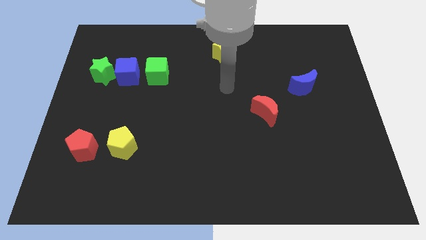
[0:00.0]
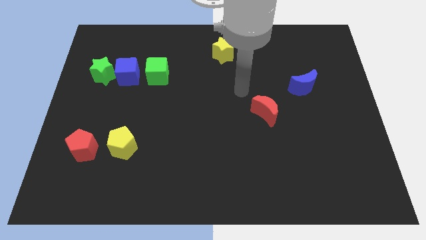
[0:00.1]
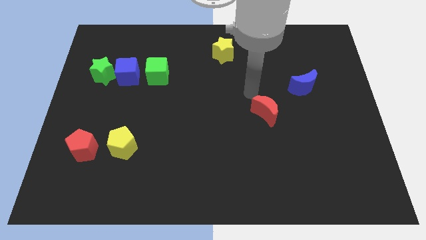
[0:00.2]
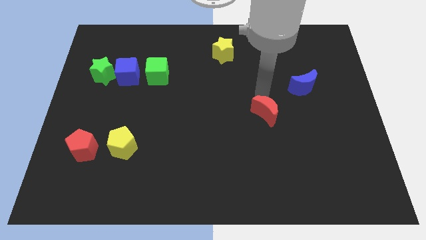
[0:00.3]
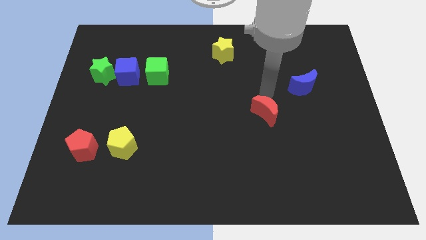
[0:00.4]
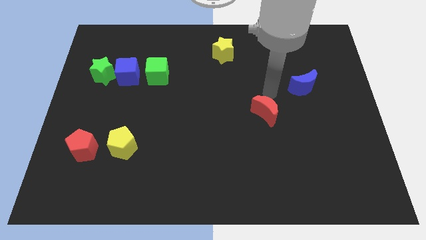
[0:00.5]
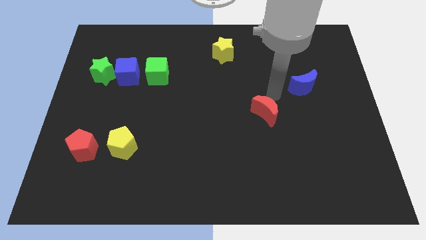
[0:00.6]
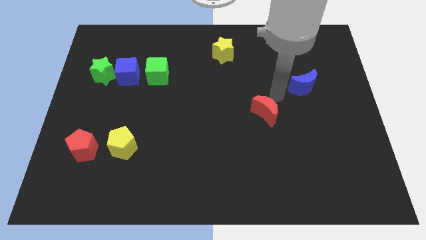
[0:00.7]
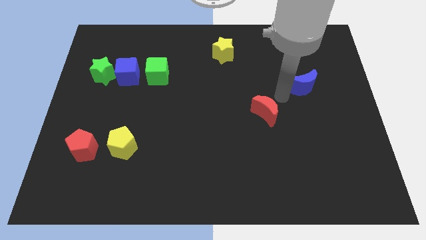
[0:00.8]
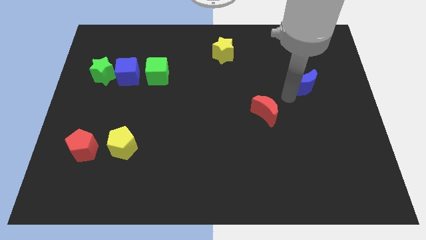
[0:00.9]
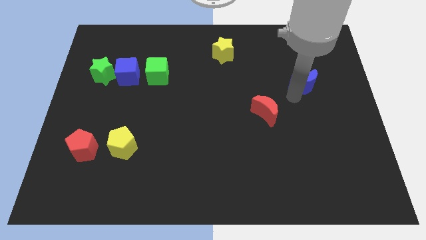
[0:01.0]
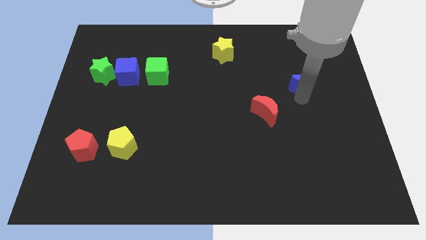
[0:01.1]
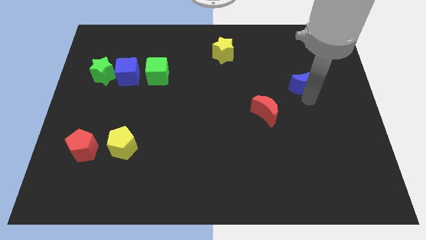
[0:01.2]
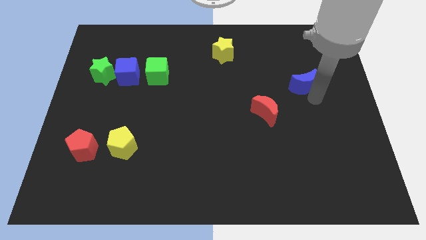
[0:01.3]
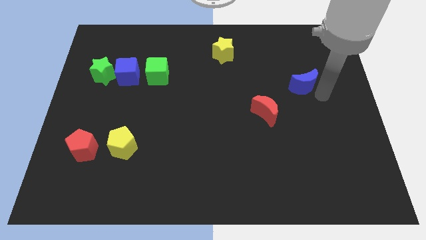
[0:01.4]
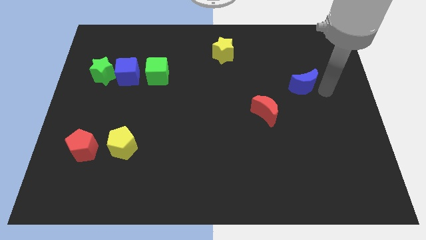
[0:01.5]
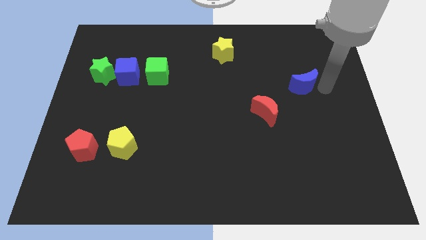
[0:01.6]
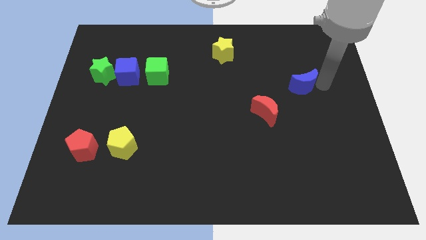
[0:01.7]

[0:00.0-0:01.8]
push arm on the top of blue moon

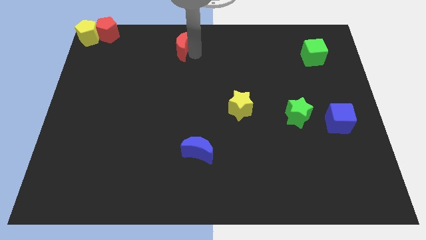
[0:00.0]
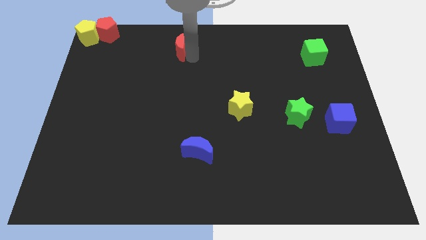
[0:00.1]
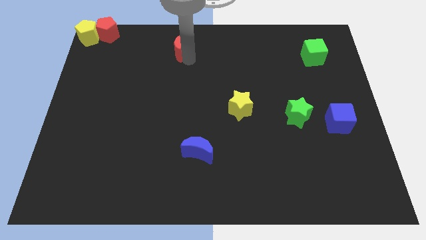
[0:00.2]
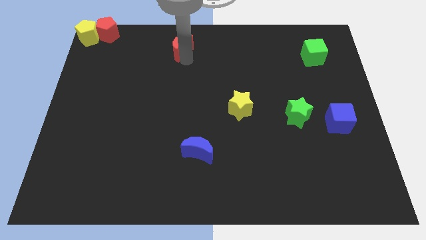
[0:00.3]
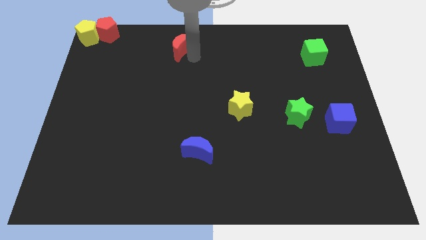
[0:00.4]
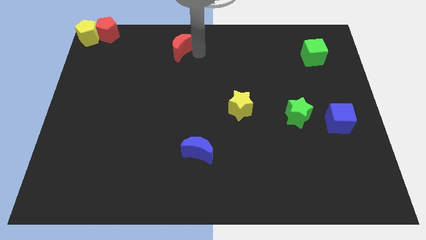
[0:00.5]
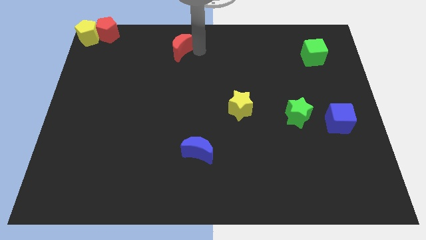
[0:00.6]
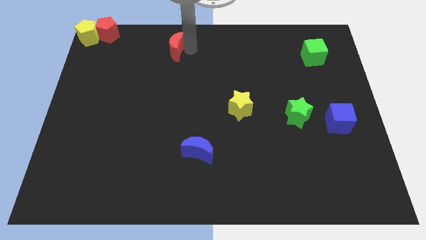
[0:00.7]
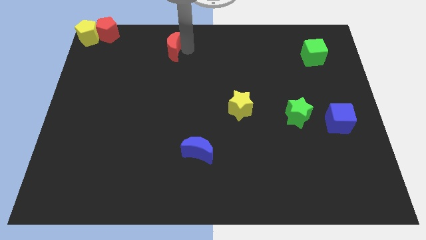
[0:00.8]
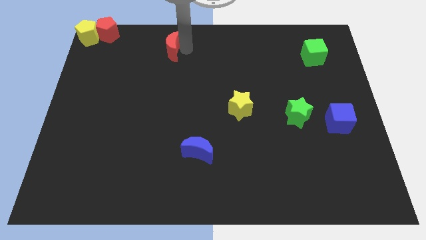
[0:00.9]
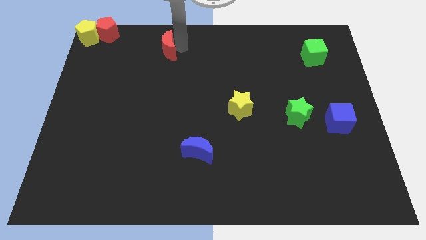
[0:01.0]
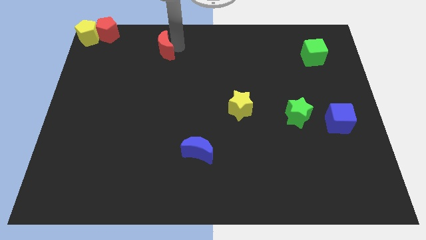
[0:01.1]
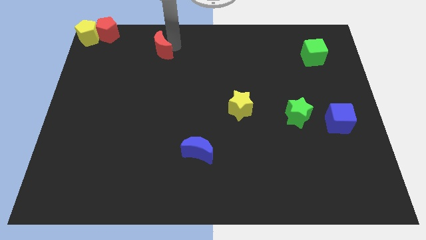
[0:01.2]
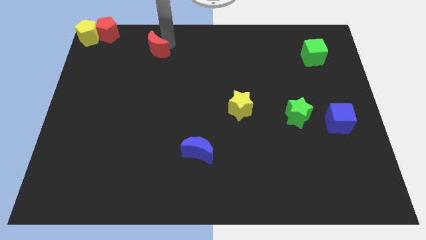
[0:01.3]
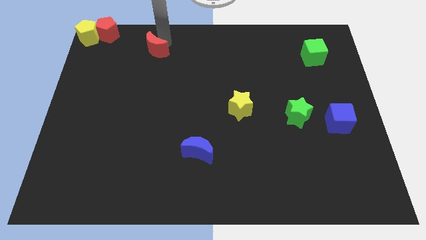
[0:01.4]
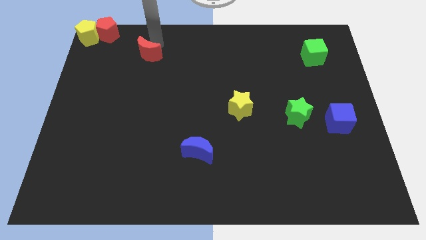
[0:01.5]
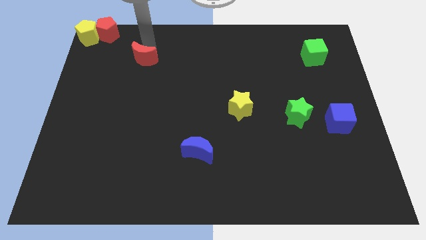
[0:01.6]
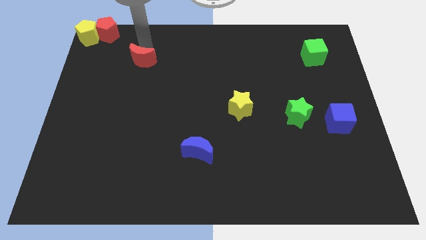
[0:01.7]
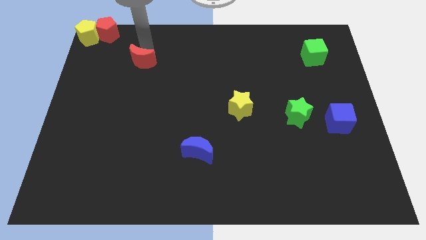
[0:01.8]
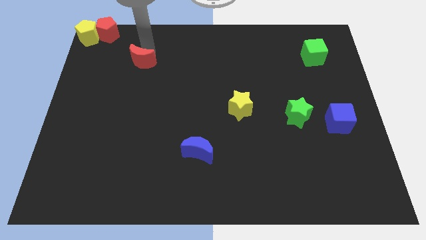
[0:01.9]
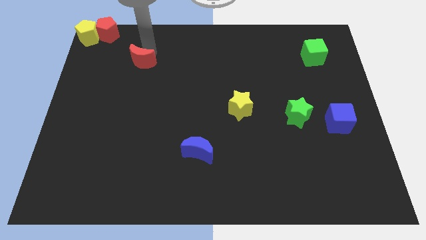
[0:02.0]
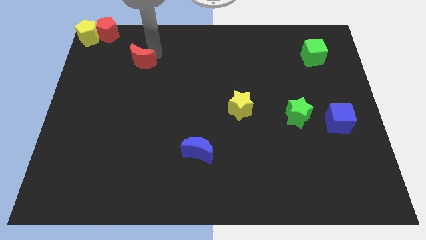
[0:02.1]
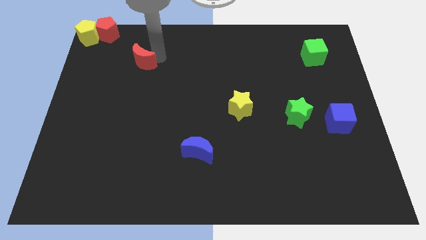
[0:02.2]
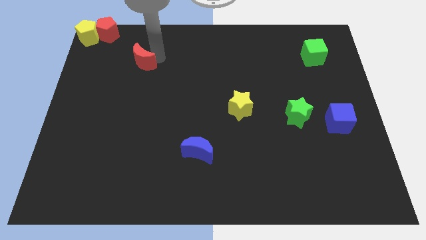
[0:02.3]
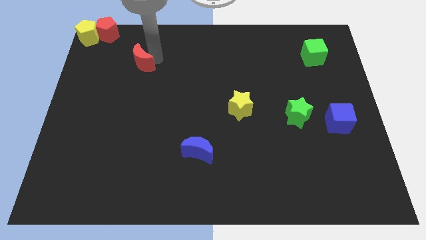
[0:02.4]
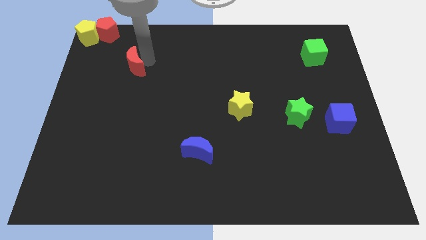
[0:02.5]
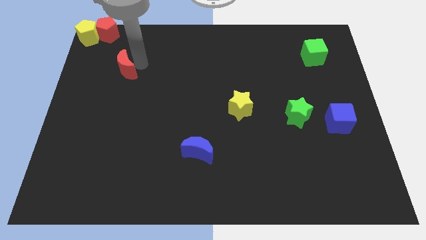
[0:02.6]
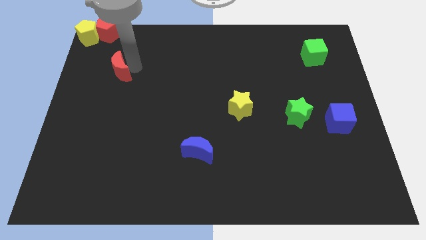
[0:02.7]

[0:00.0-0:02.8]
push the red crescent to the bottom right of the red pentagon

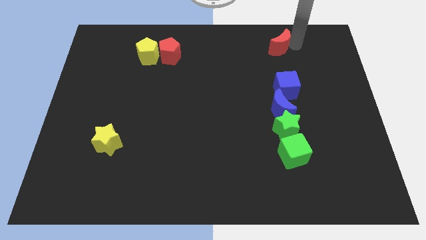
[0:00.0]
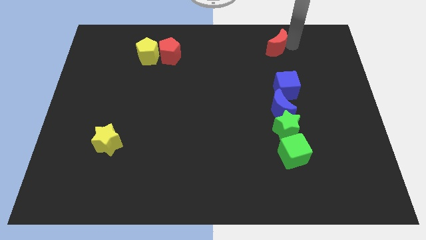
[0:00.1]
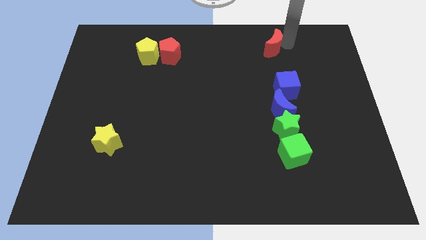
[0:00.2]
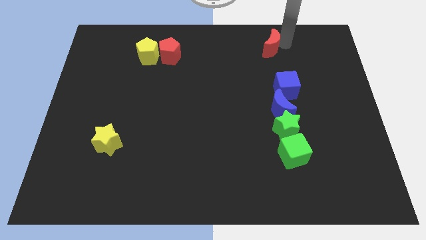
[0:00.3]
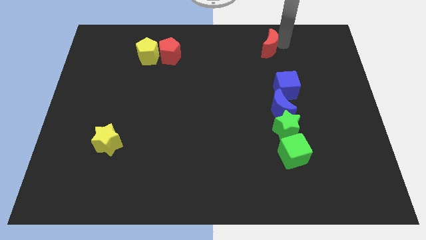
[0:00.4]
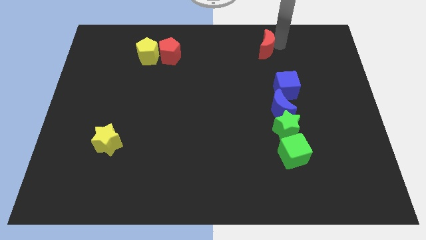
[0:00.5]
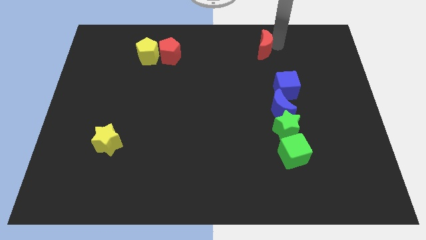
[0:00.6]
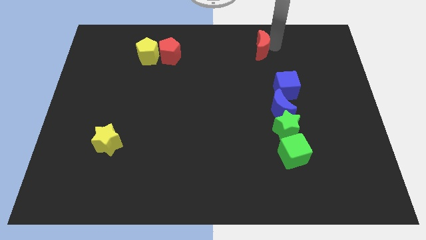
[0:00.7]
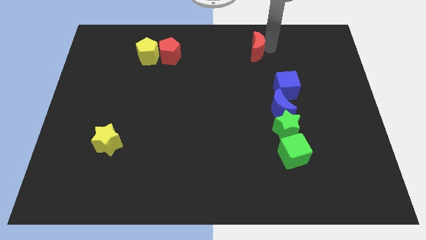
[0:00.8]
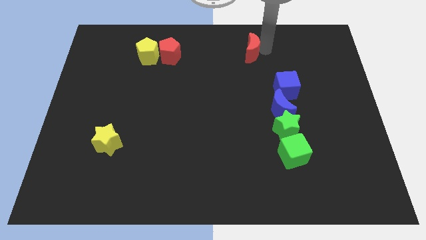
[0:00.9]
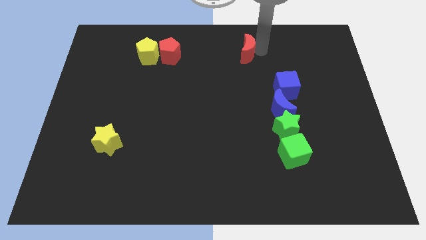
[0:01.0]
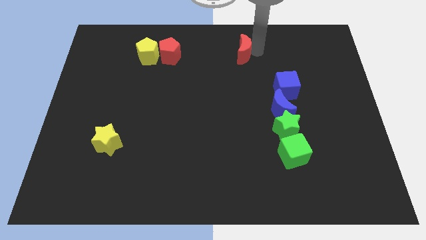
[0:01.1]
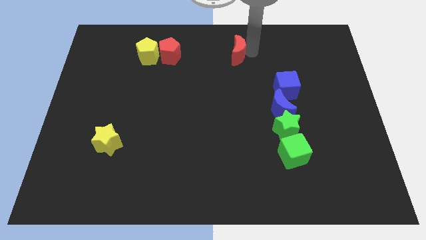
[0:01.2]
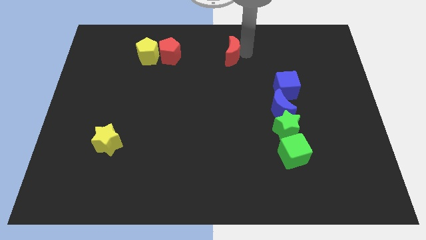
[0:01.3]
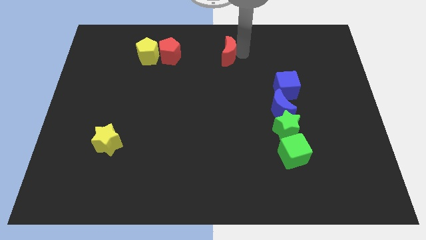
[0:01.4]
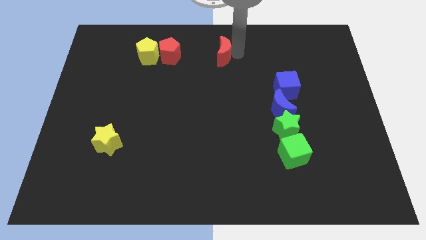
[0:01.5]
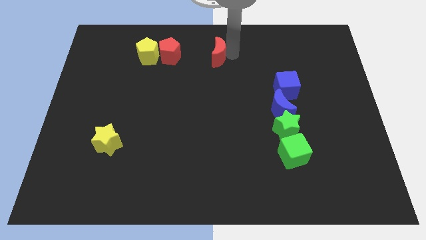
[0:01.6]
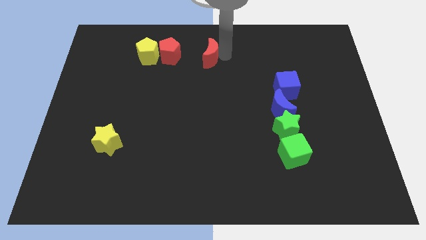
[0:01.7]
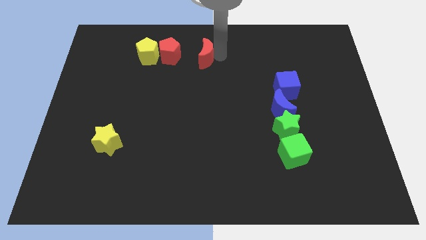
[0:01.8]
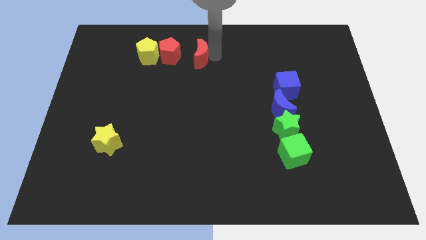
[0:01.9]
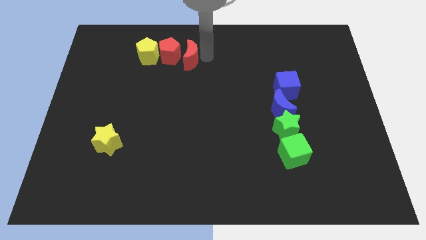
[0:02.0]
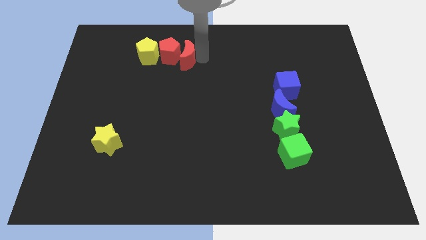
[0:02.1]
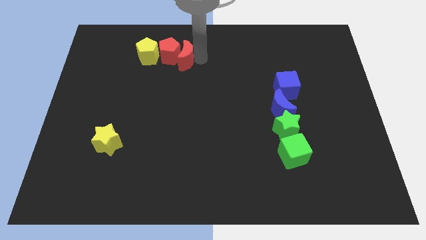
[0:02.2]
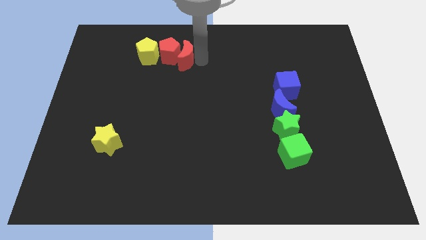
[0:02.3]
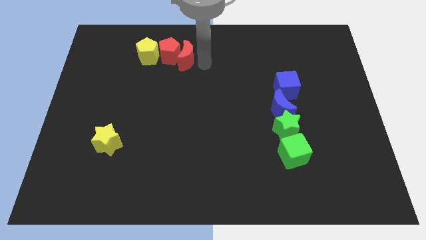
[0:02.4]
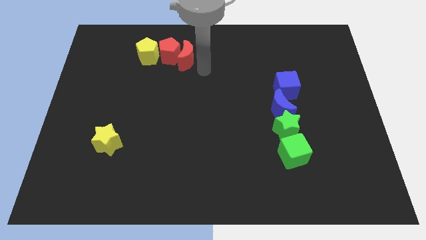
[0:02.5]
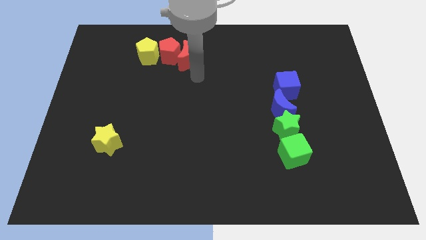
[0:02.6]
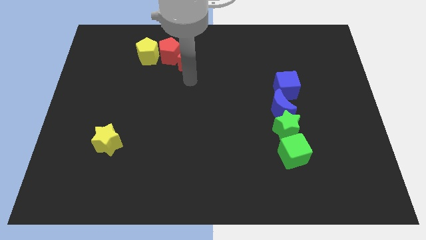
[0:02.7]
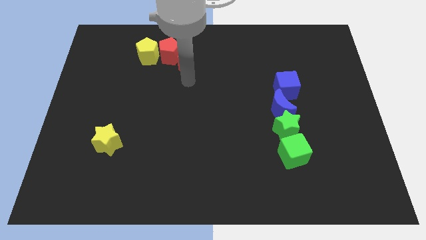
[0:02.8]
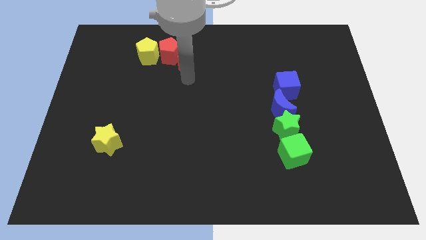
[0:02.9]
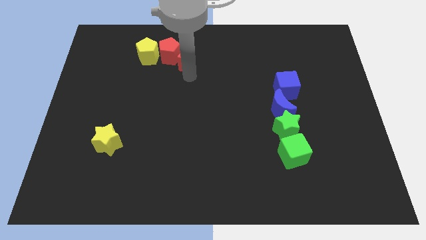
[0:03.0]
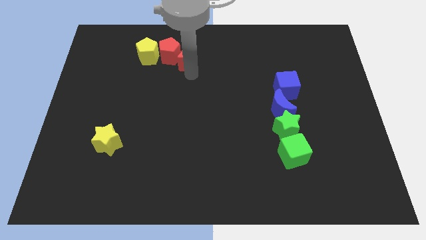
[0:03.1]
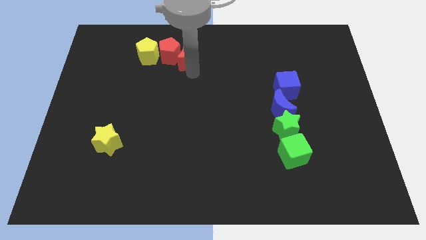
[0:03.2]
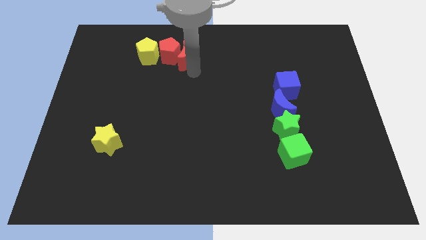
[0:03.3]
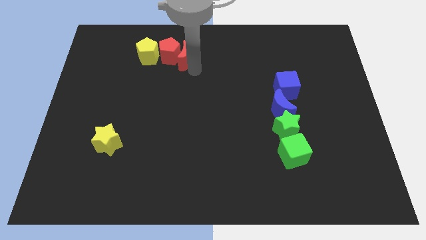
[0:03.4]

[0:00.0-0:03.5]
push the red moon into the red pentagon

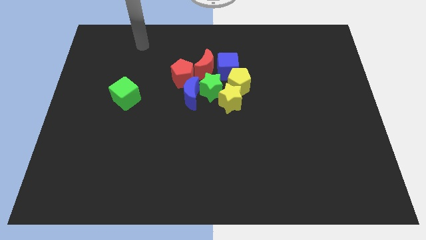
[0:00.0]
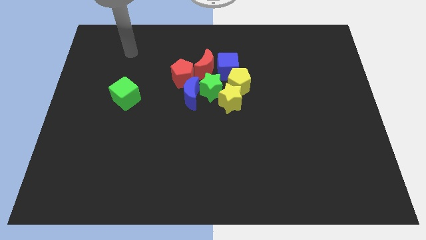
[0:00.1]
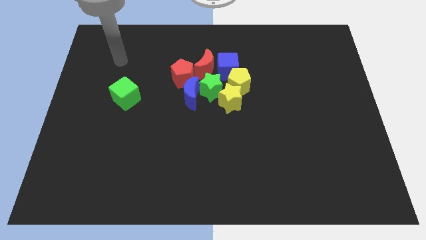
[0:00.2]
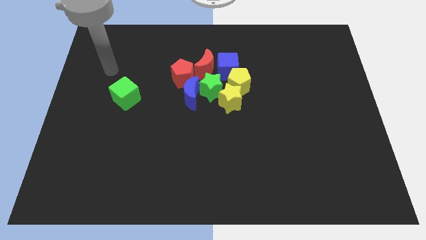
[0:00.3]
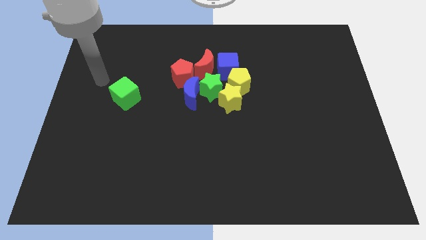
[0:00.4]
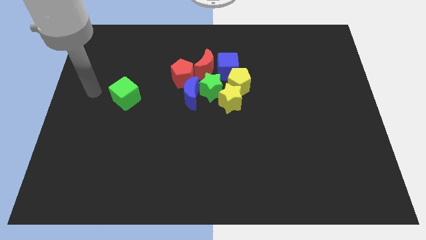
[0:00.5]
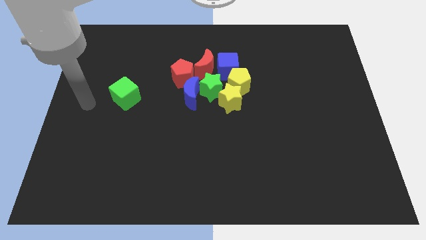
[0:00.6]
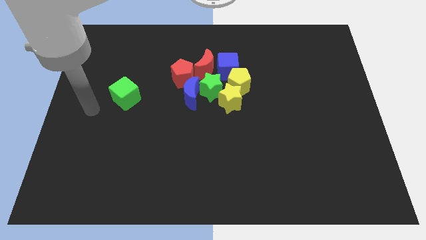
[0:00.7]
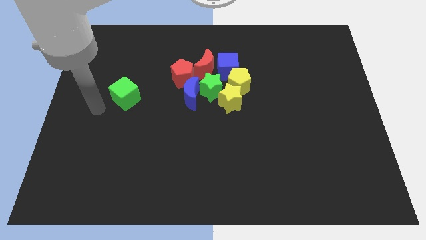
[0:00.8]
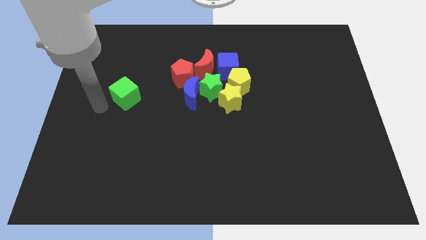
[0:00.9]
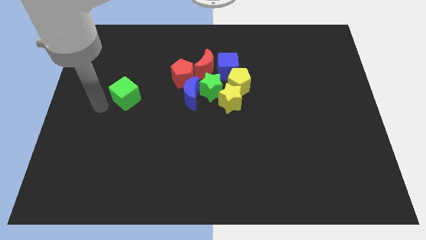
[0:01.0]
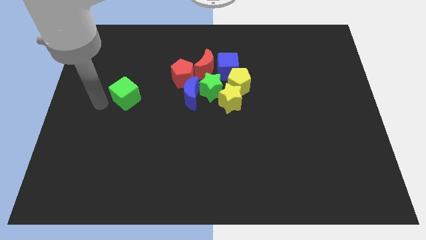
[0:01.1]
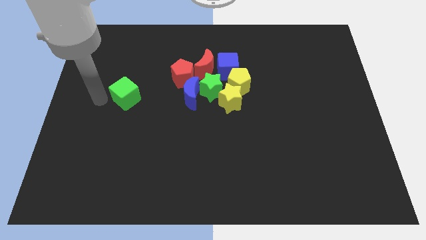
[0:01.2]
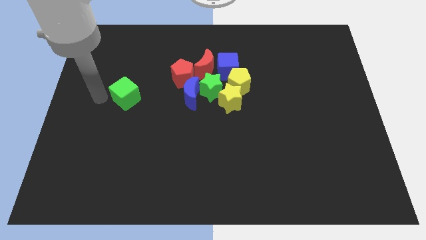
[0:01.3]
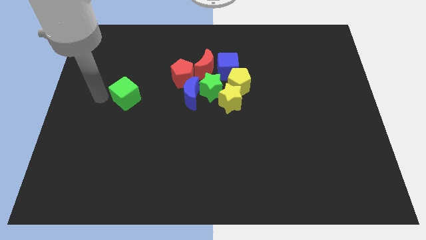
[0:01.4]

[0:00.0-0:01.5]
move your arm close to the left side of the green cube
